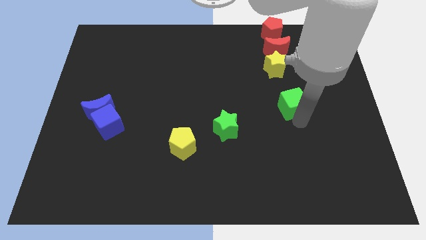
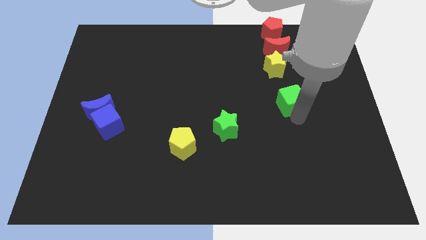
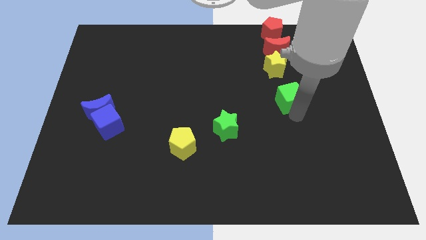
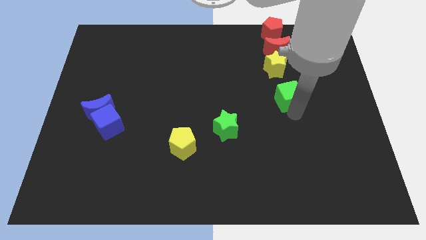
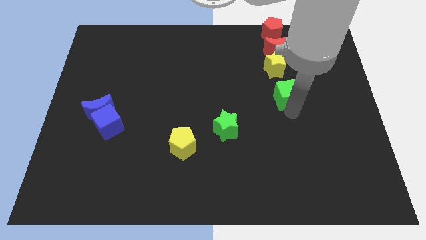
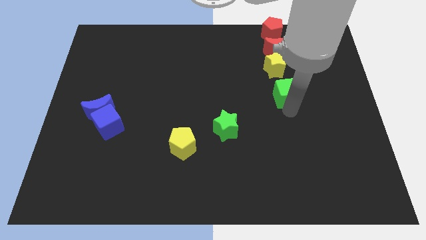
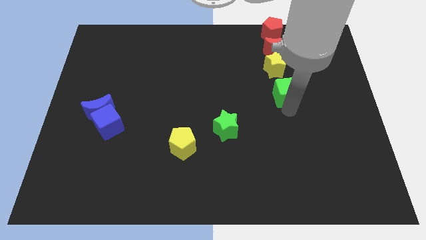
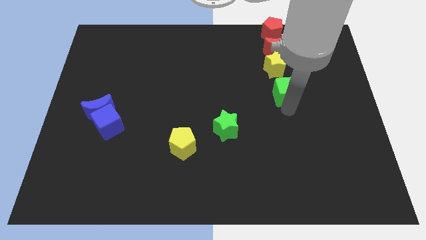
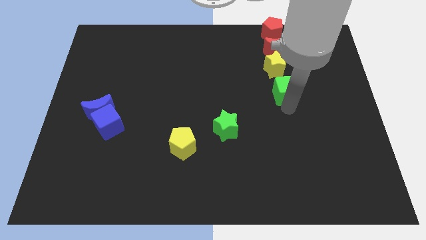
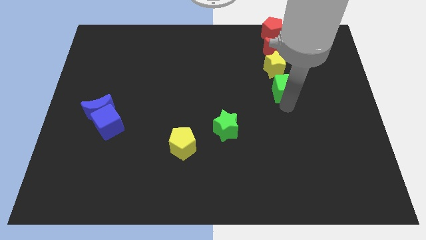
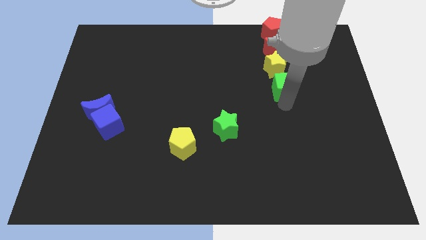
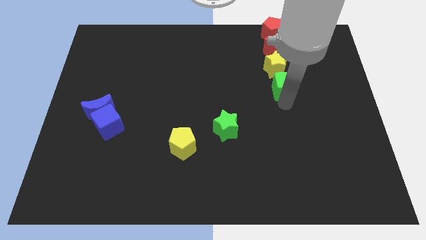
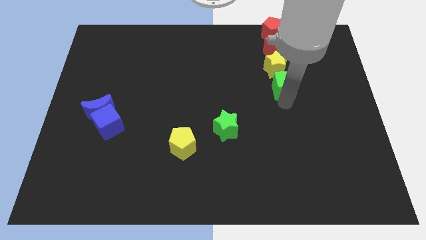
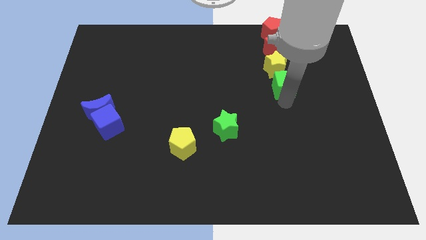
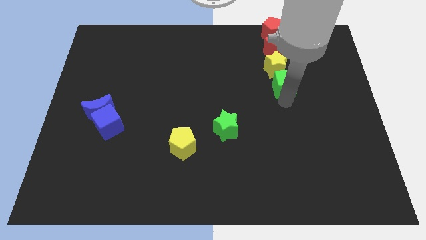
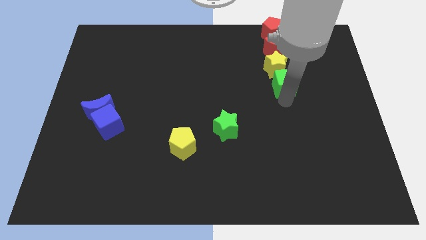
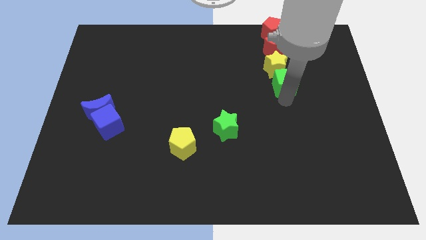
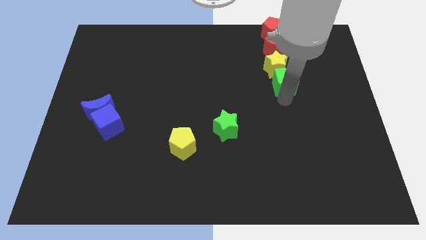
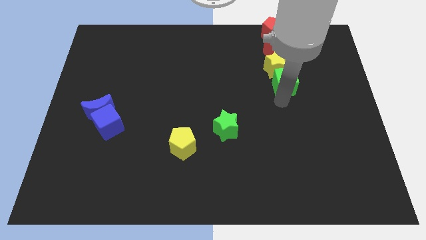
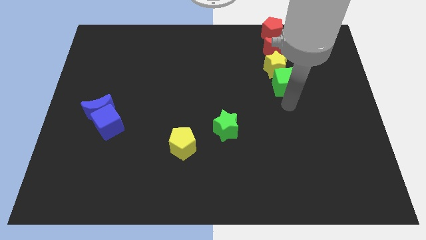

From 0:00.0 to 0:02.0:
move the green cube into the yellow star

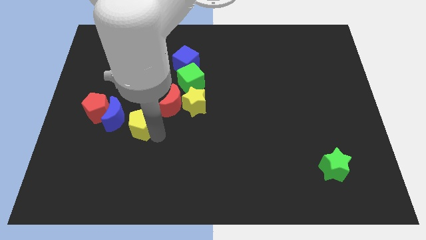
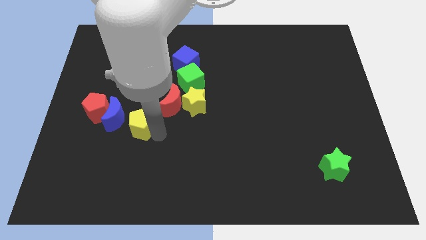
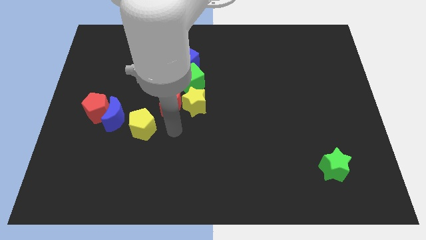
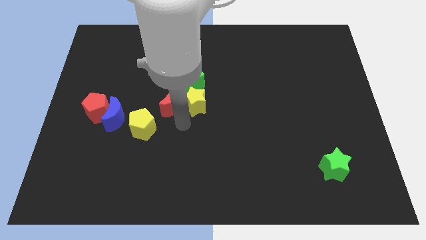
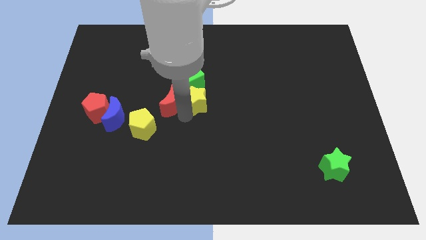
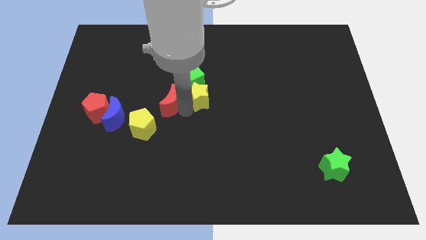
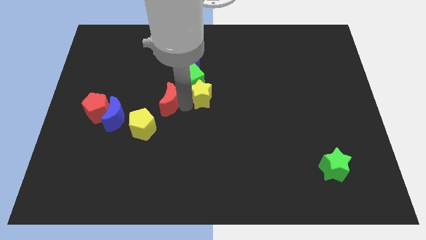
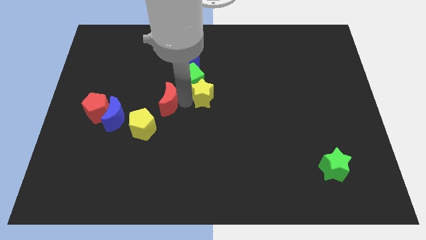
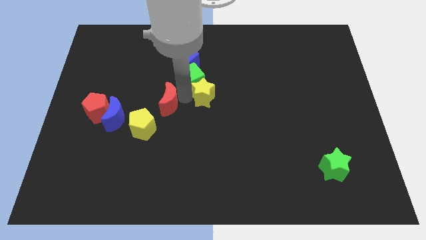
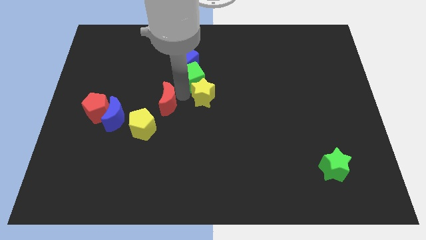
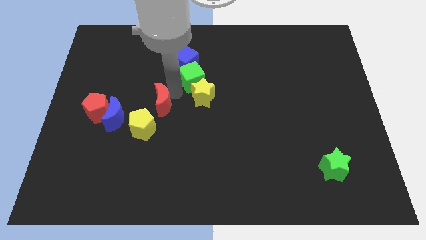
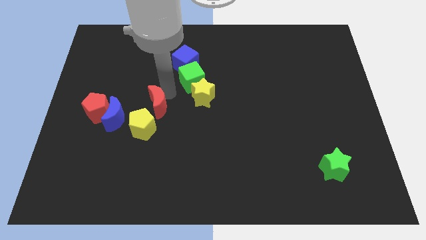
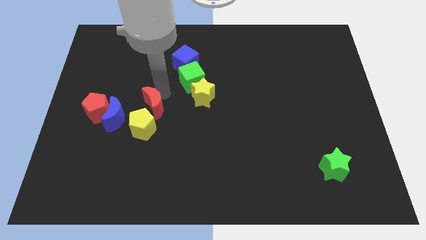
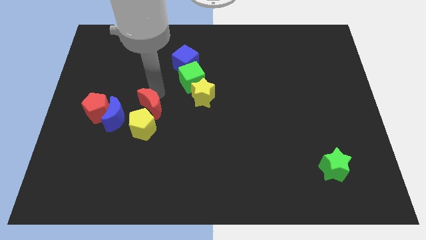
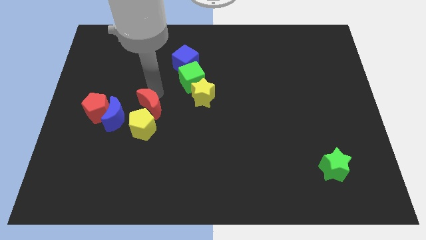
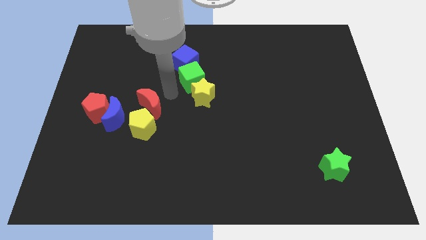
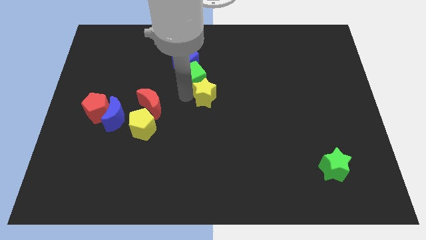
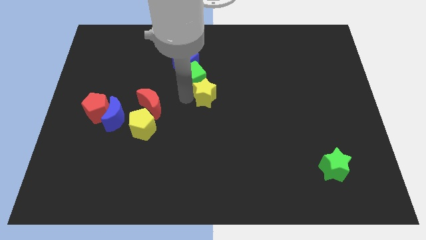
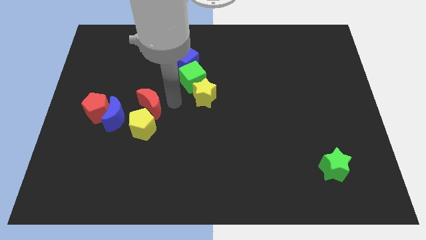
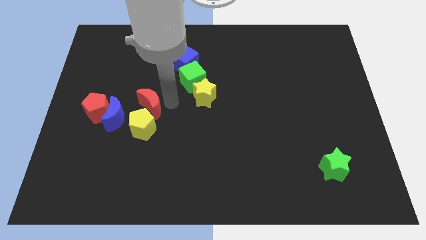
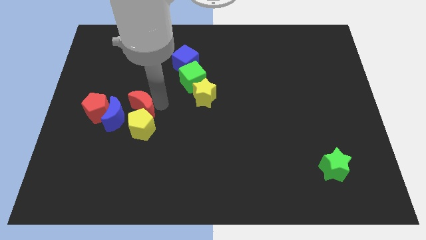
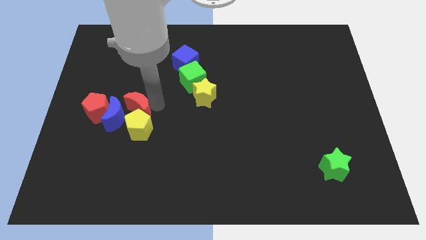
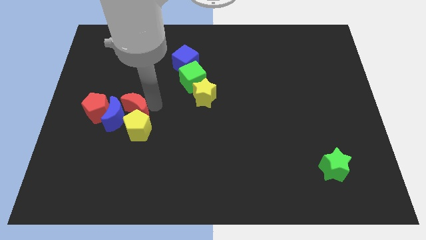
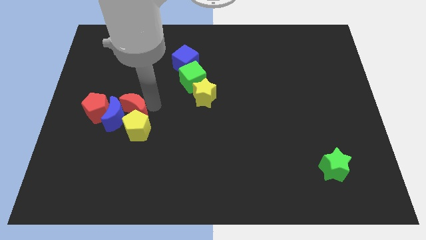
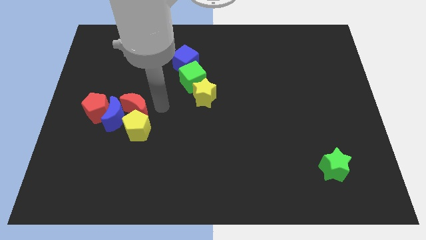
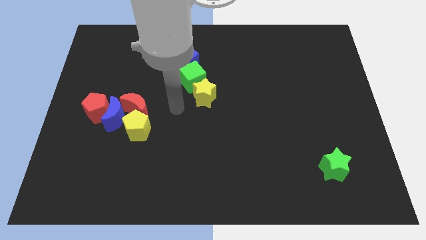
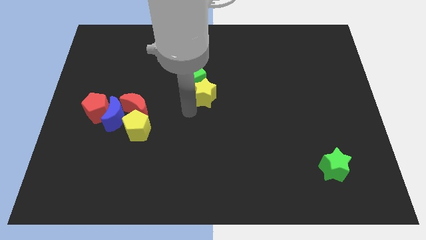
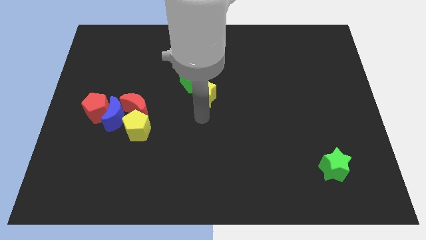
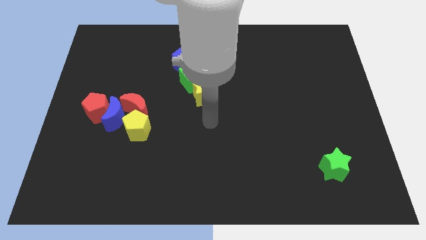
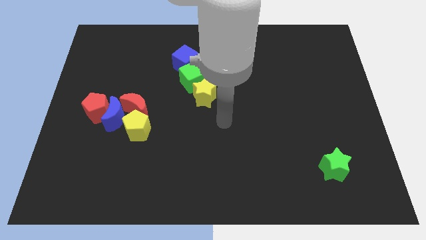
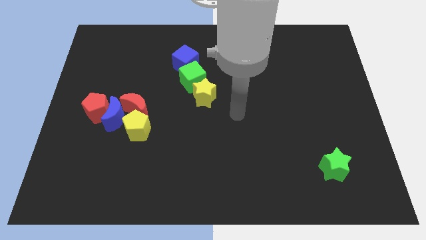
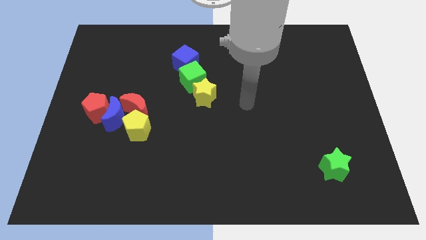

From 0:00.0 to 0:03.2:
slide the red crescent into the group of blocks

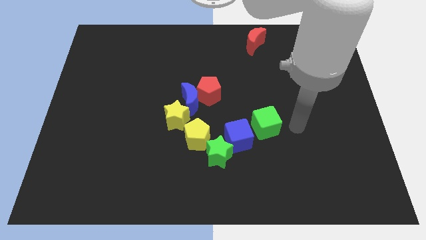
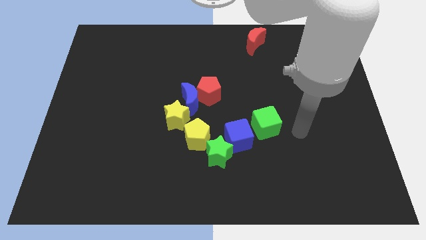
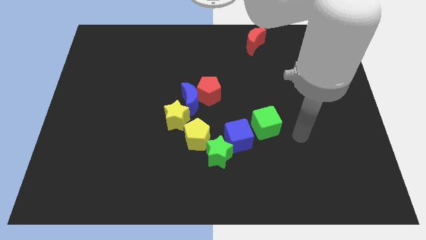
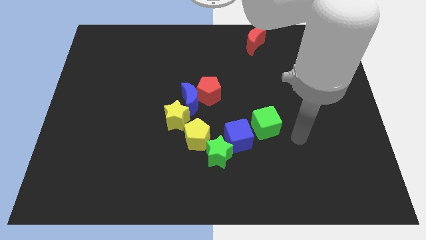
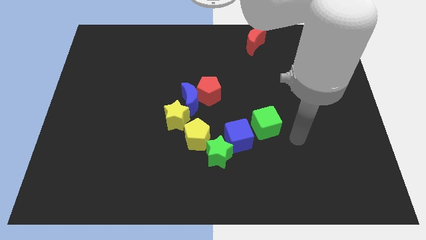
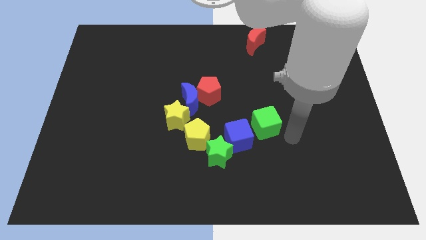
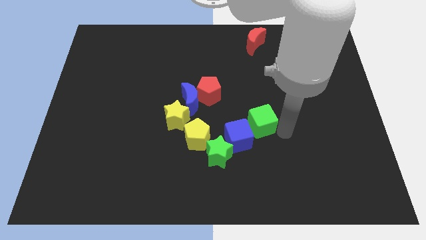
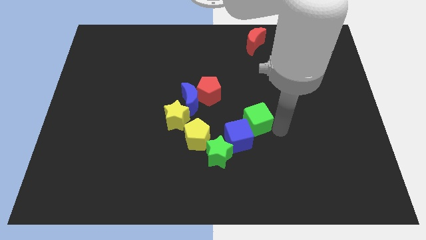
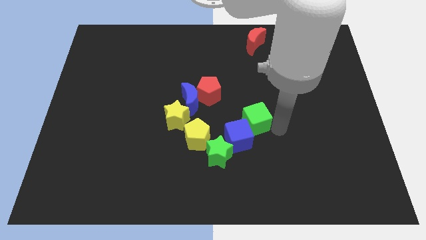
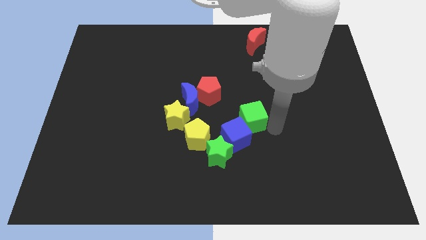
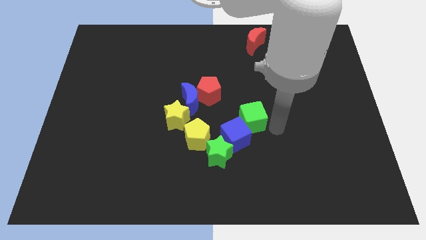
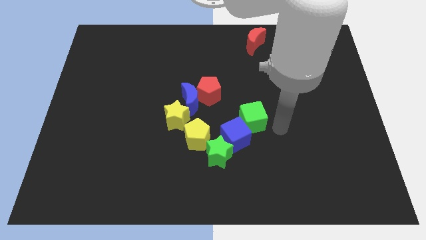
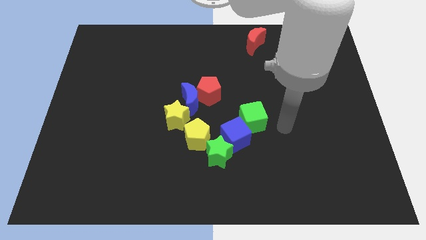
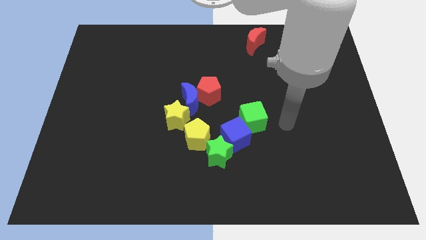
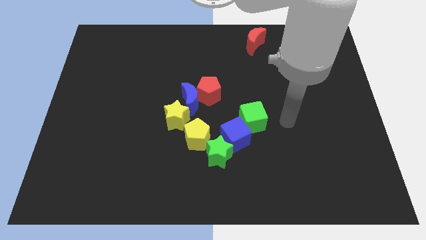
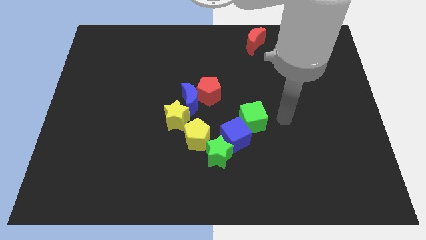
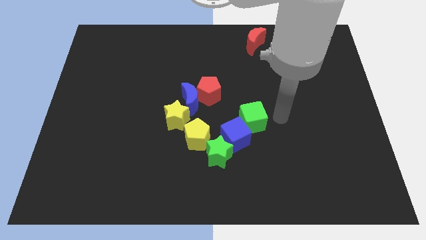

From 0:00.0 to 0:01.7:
push the green cube into the blue cube

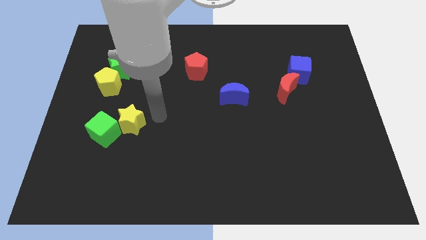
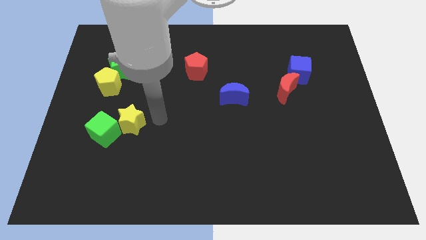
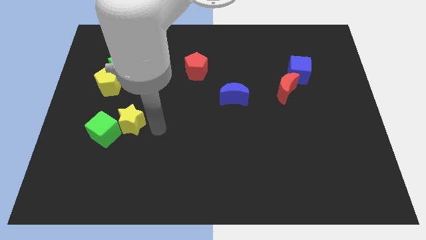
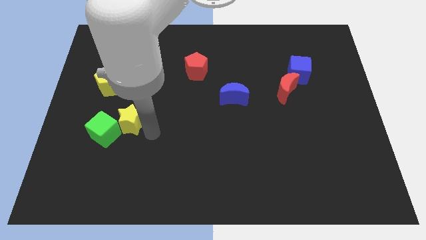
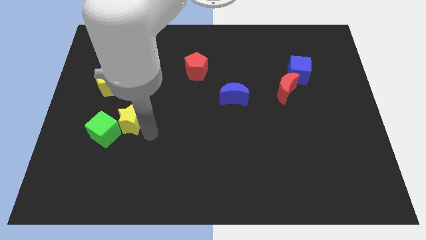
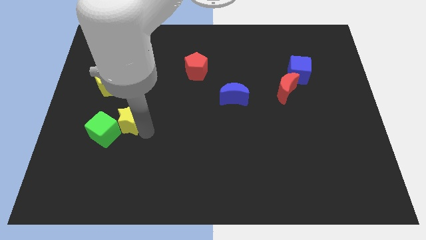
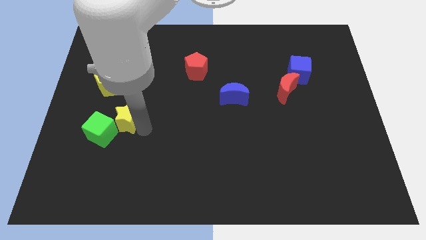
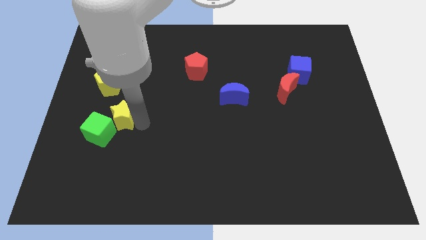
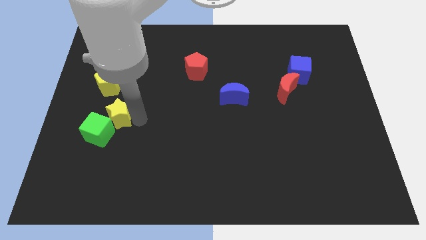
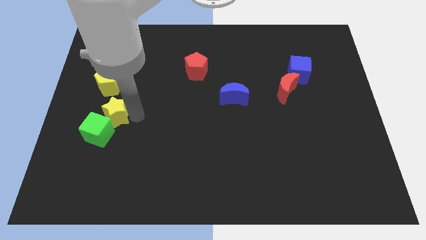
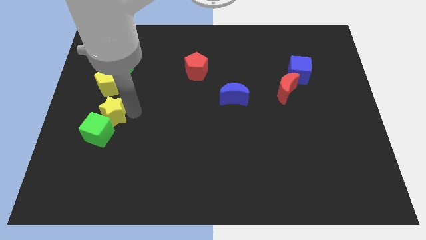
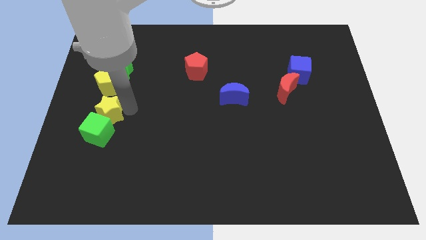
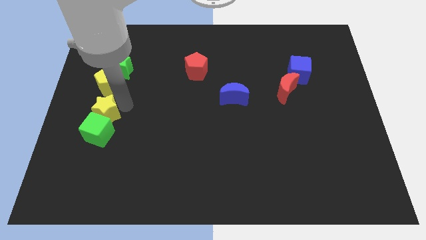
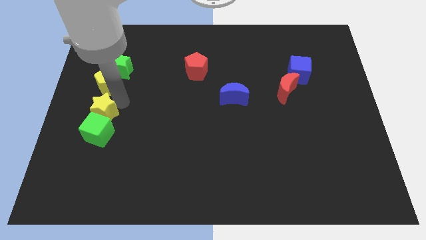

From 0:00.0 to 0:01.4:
push yellow star below yellow pentagon

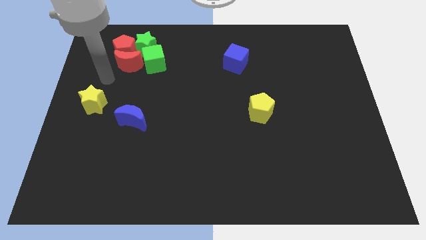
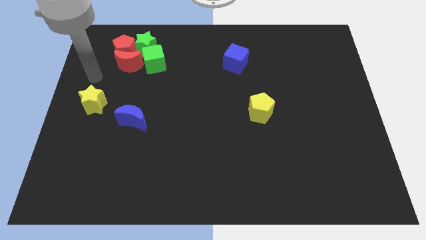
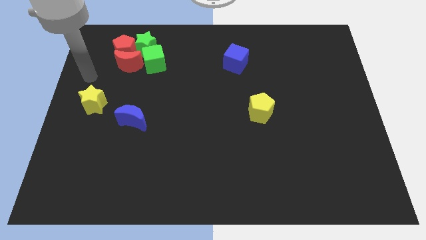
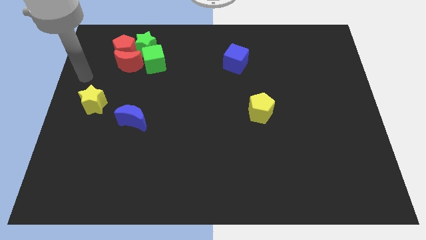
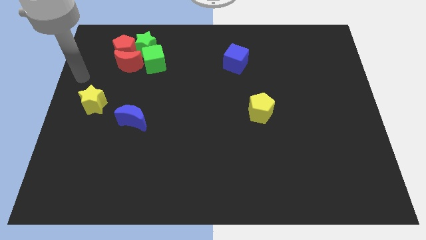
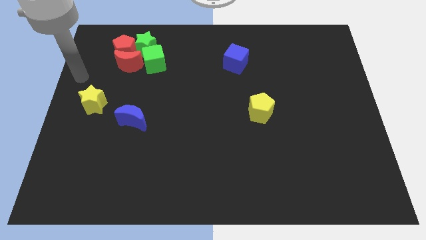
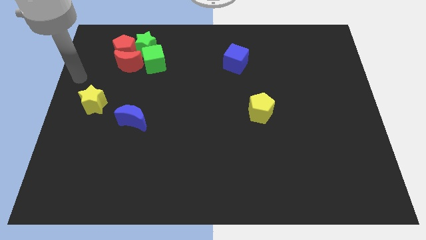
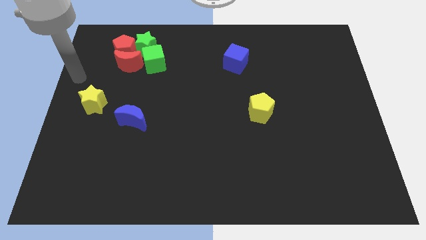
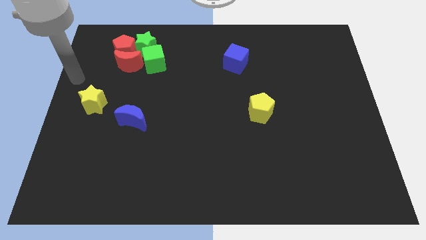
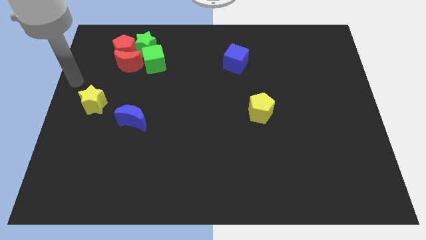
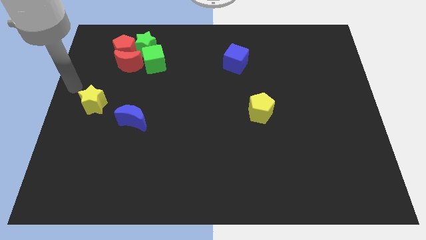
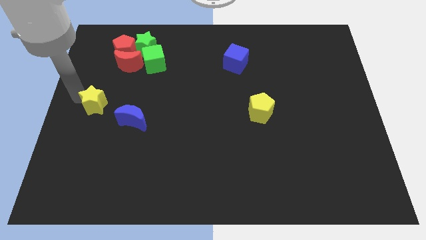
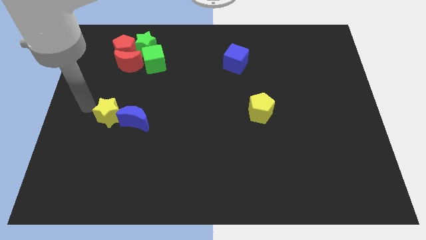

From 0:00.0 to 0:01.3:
move the yellow star to the left of the blue crescent
